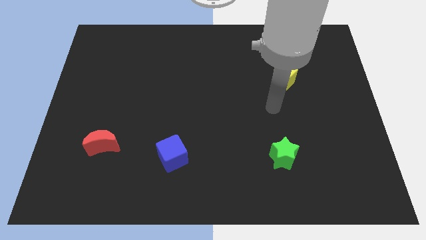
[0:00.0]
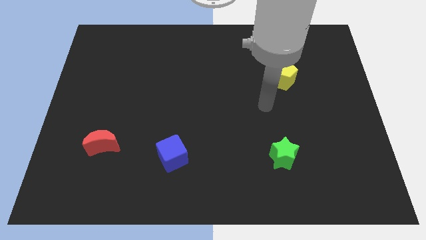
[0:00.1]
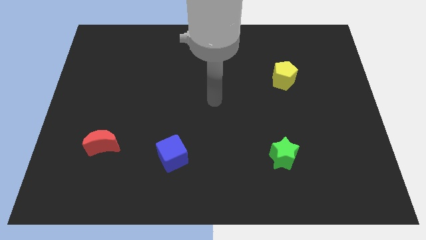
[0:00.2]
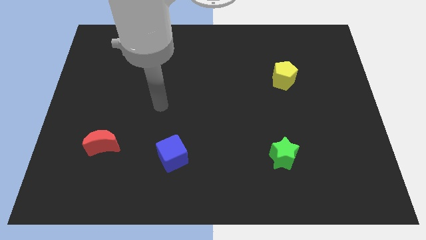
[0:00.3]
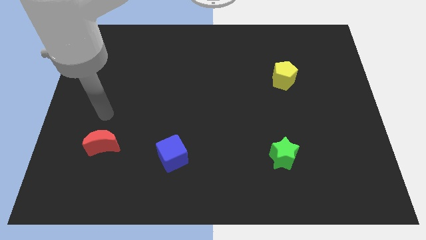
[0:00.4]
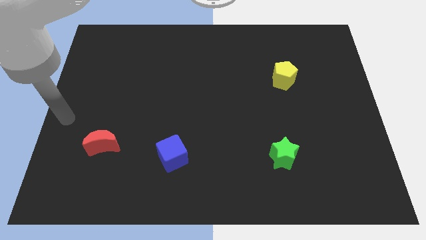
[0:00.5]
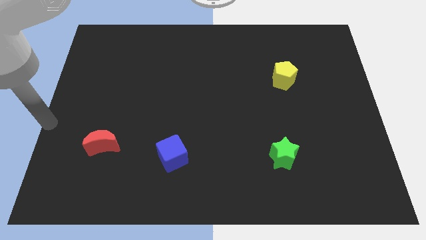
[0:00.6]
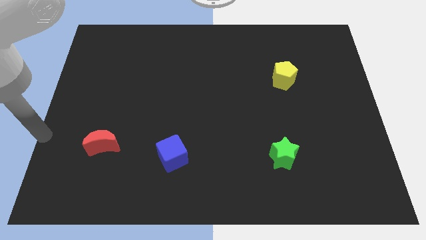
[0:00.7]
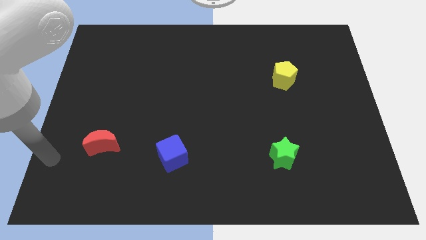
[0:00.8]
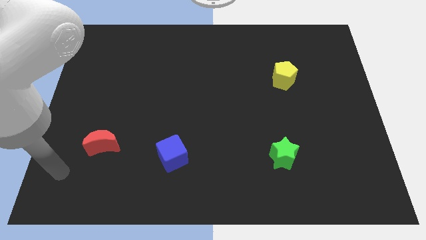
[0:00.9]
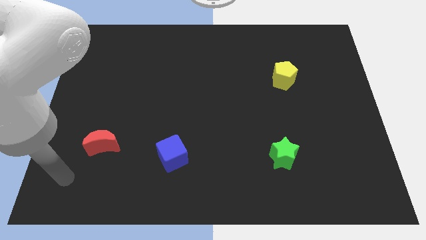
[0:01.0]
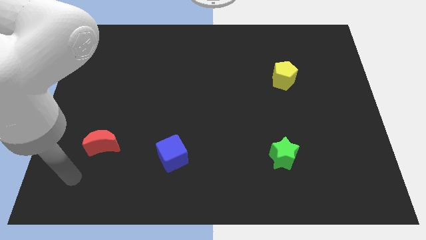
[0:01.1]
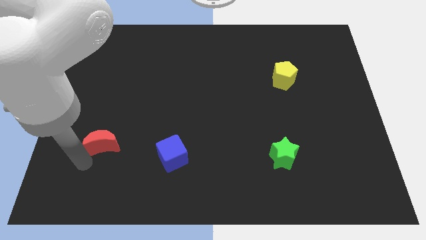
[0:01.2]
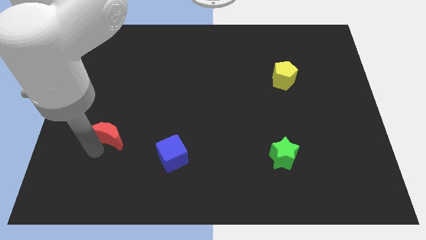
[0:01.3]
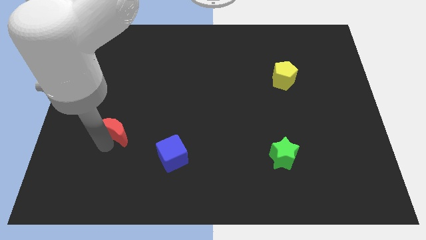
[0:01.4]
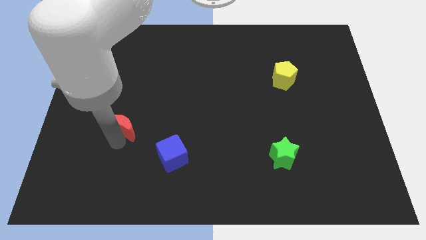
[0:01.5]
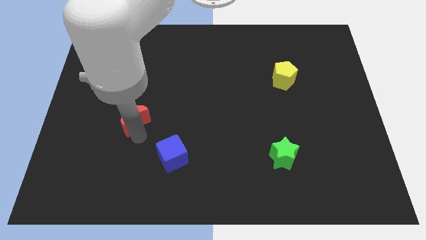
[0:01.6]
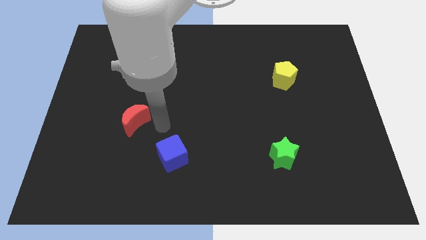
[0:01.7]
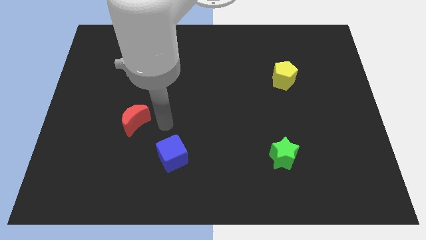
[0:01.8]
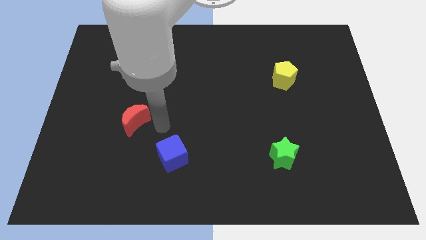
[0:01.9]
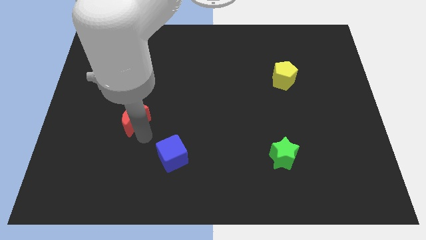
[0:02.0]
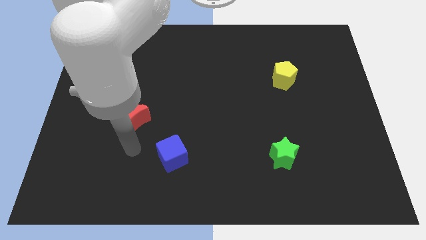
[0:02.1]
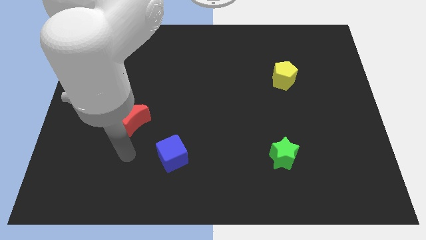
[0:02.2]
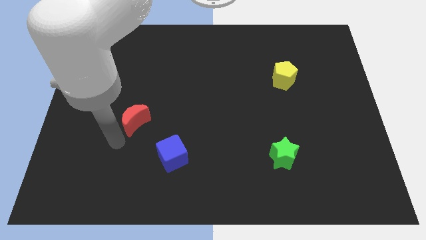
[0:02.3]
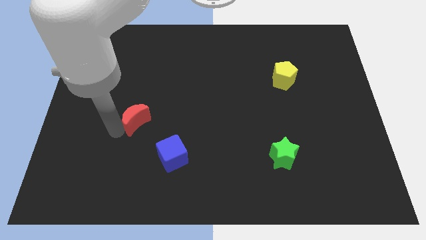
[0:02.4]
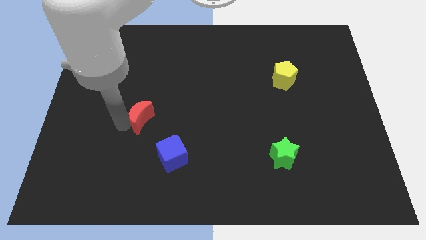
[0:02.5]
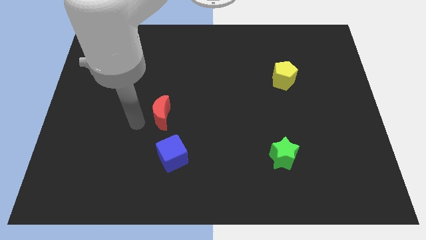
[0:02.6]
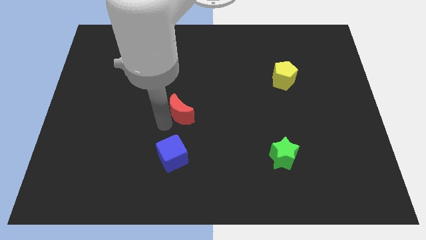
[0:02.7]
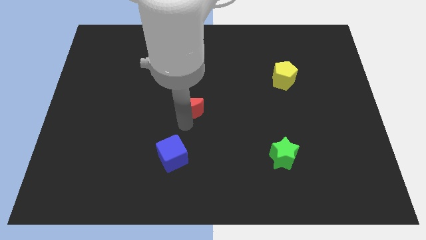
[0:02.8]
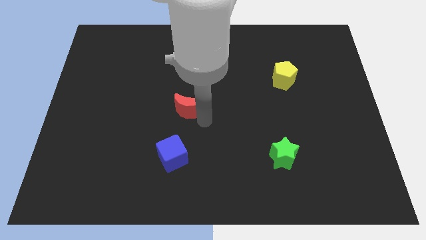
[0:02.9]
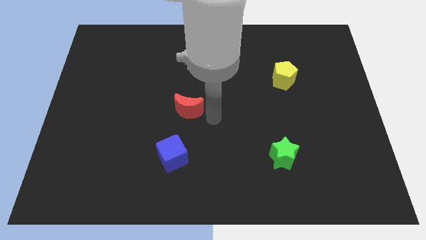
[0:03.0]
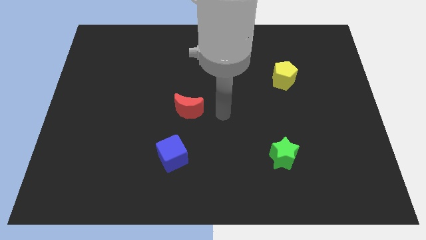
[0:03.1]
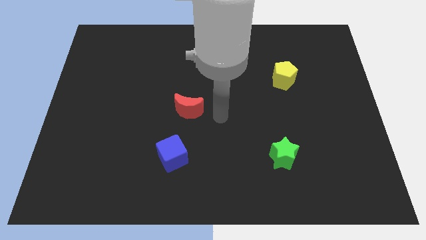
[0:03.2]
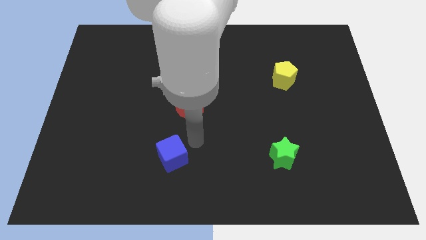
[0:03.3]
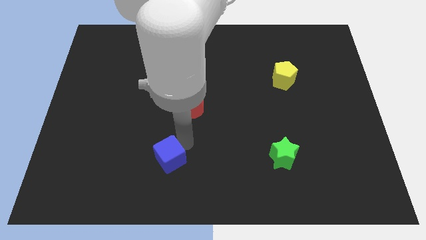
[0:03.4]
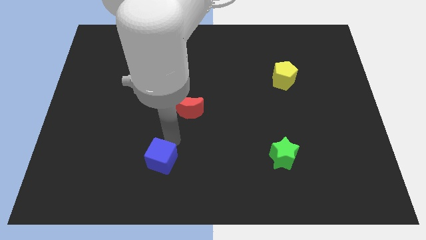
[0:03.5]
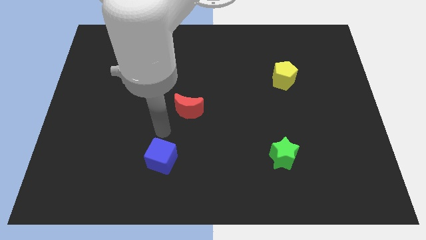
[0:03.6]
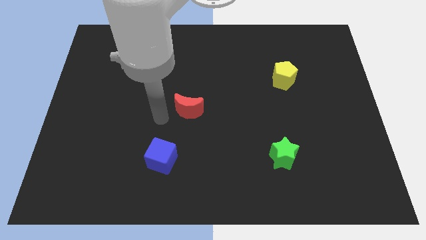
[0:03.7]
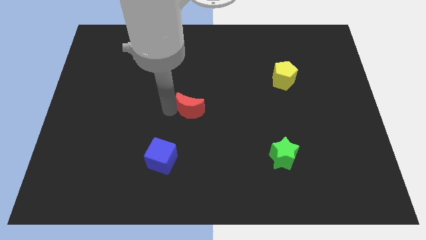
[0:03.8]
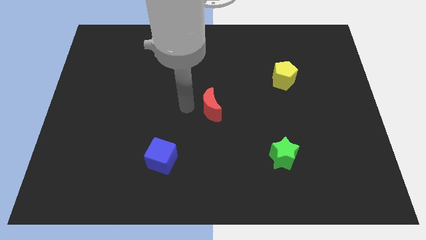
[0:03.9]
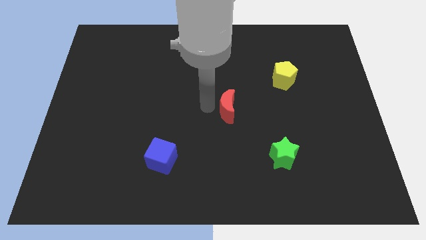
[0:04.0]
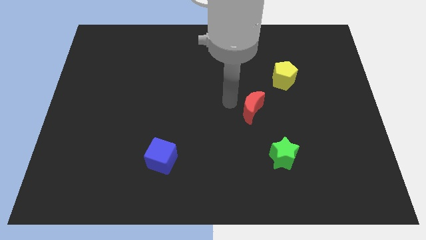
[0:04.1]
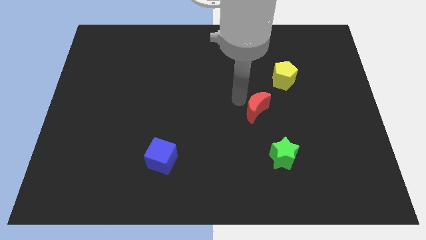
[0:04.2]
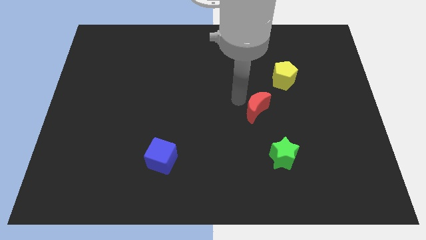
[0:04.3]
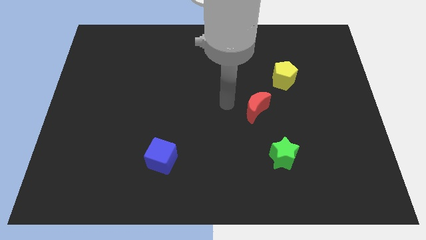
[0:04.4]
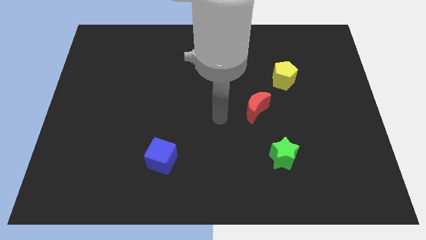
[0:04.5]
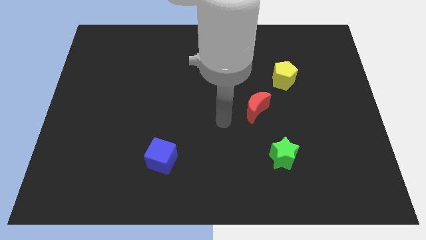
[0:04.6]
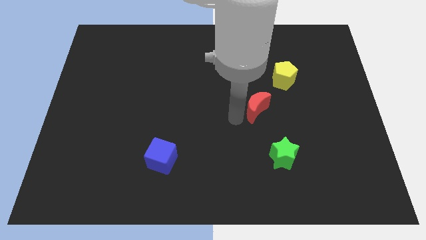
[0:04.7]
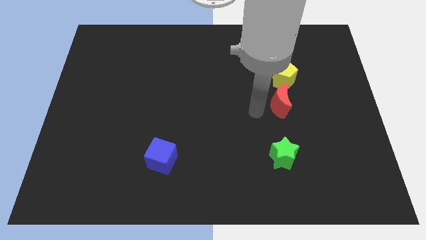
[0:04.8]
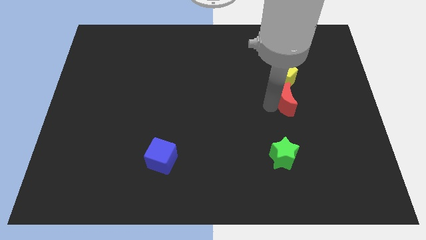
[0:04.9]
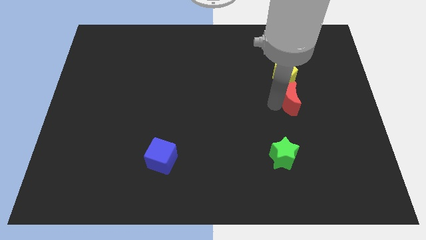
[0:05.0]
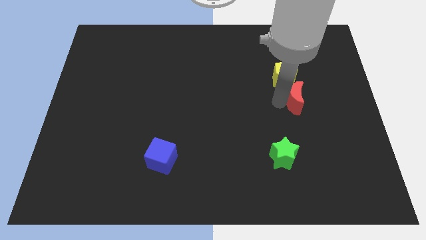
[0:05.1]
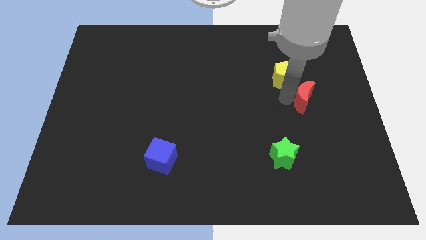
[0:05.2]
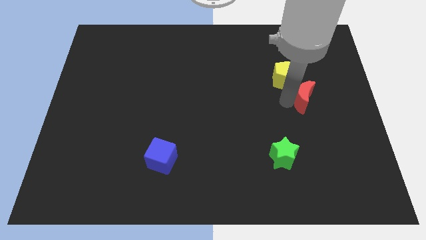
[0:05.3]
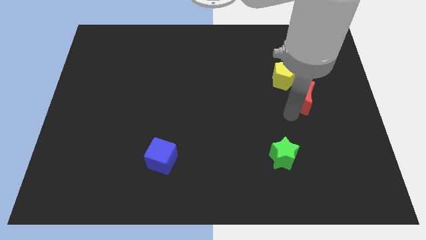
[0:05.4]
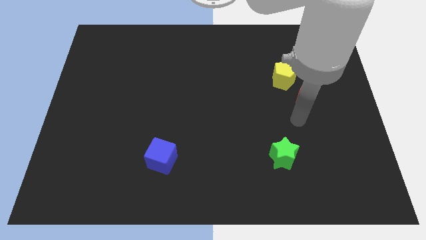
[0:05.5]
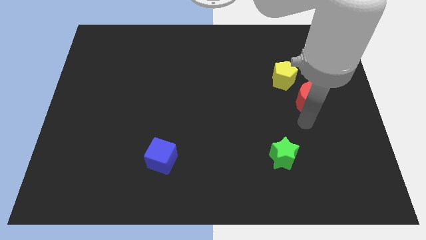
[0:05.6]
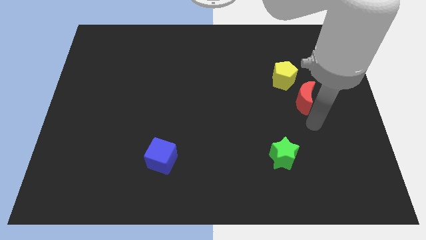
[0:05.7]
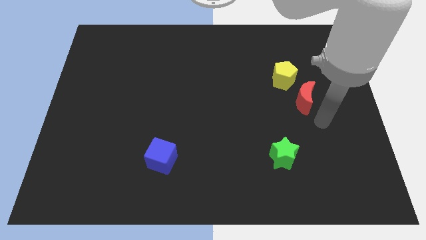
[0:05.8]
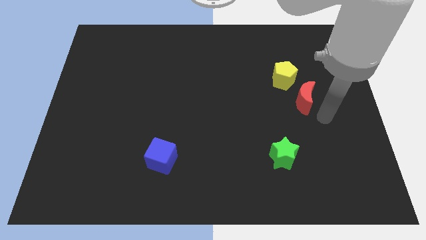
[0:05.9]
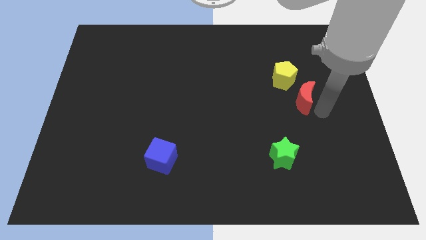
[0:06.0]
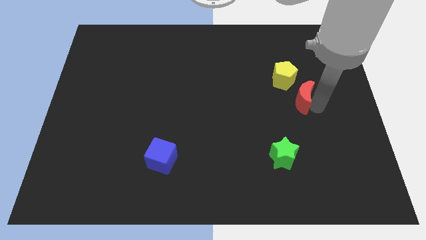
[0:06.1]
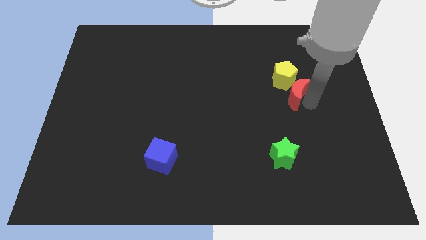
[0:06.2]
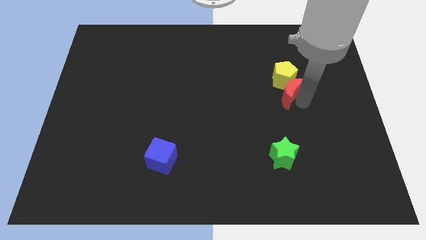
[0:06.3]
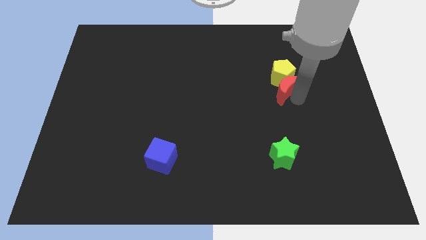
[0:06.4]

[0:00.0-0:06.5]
move the moon next to the yellow pentagon

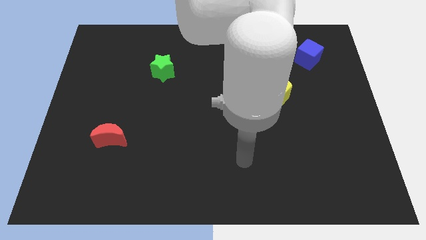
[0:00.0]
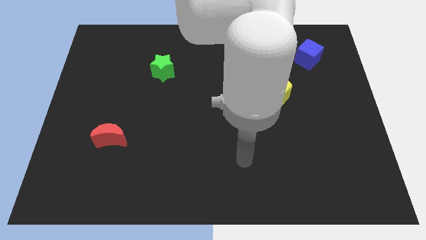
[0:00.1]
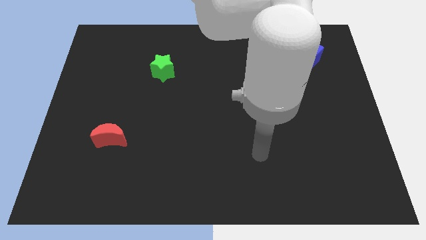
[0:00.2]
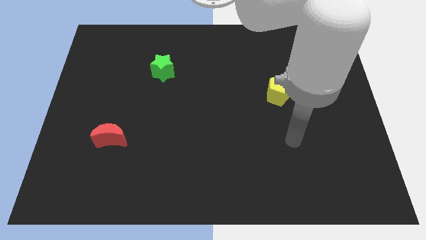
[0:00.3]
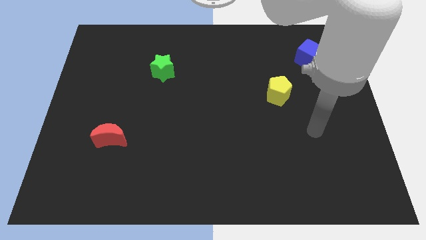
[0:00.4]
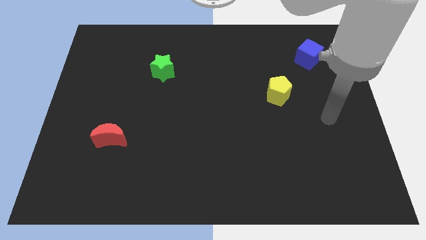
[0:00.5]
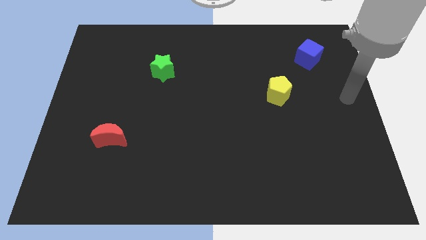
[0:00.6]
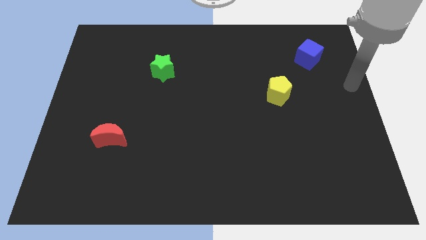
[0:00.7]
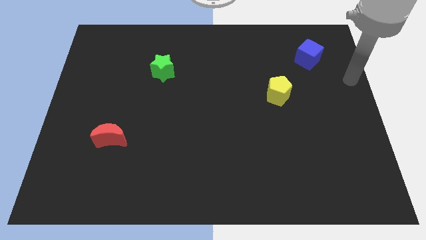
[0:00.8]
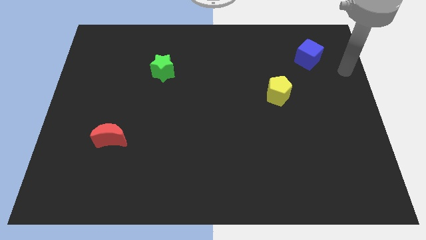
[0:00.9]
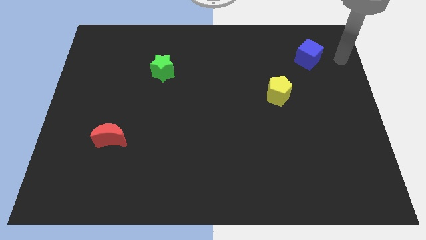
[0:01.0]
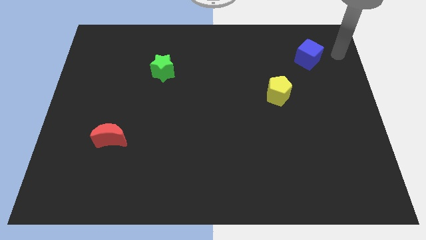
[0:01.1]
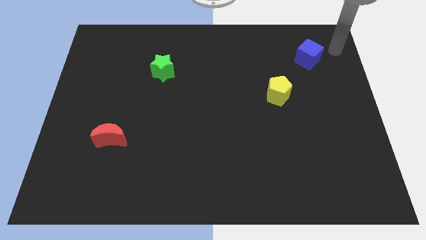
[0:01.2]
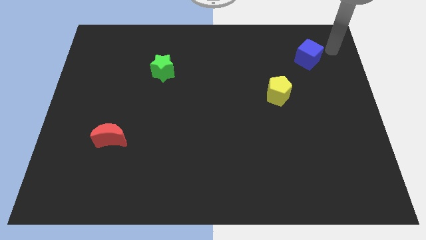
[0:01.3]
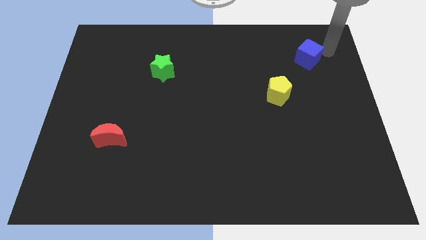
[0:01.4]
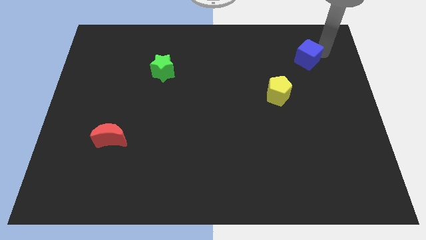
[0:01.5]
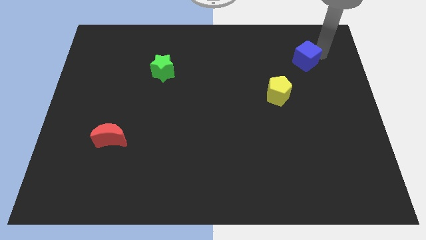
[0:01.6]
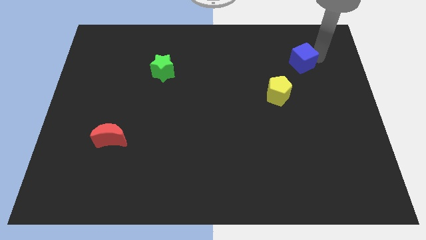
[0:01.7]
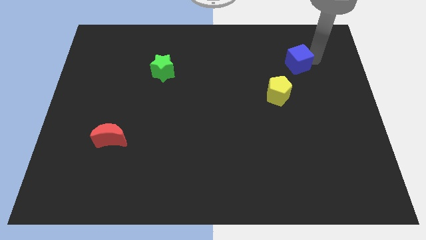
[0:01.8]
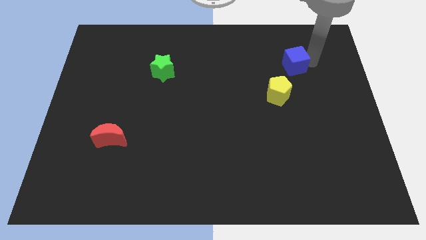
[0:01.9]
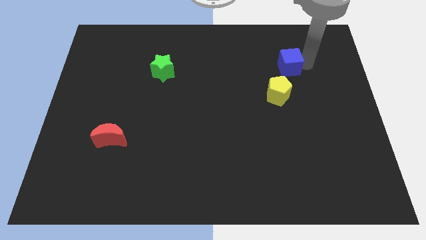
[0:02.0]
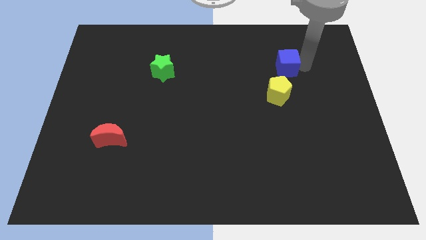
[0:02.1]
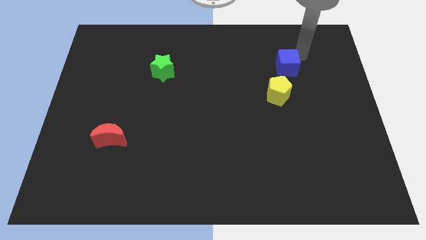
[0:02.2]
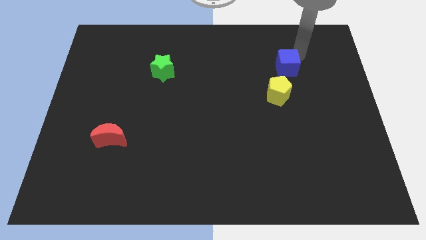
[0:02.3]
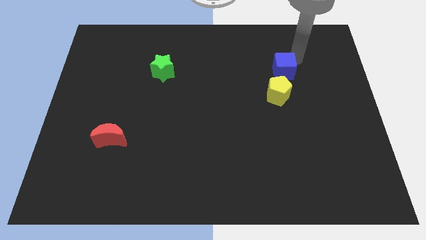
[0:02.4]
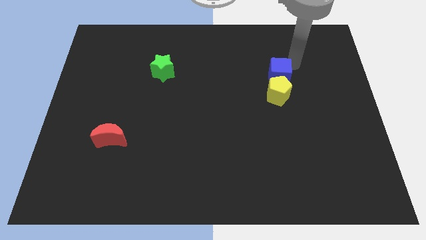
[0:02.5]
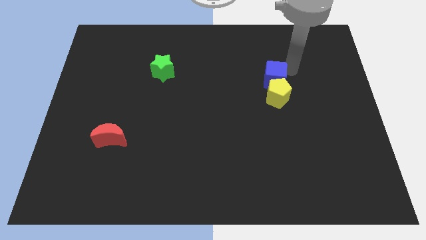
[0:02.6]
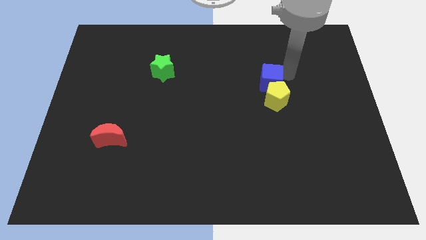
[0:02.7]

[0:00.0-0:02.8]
push the blue block close to the pentagon
